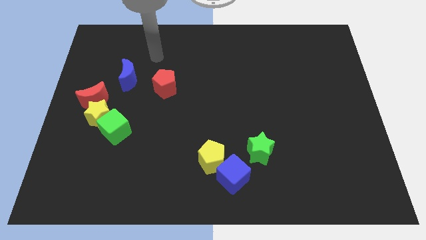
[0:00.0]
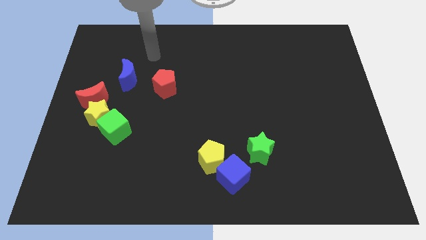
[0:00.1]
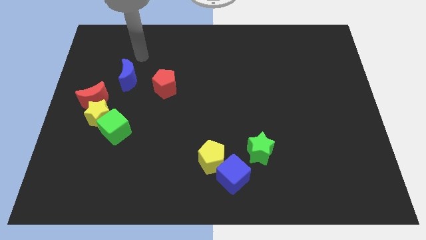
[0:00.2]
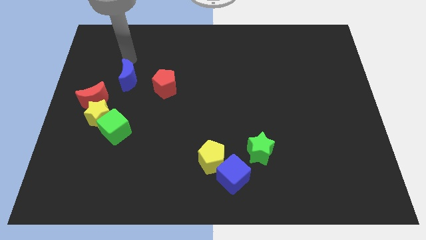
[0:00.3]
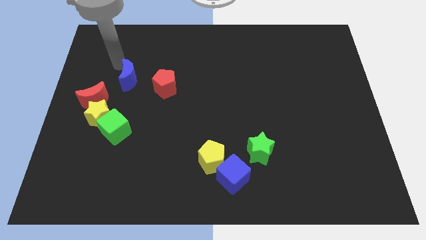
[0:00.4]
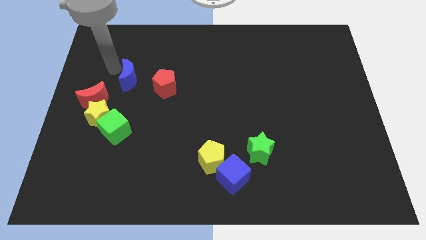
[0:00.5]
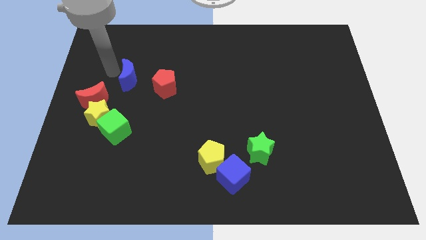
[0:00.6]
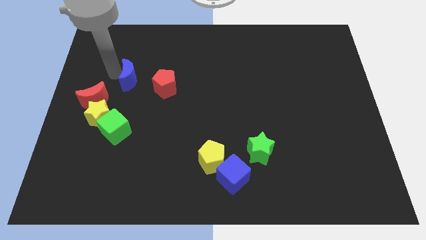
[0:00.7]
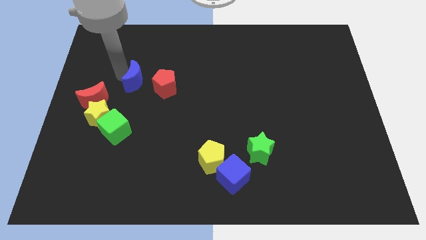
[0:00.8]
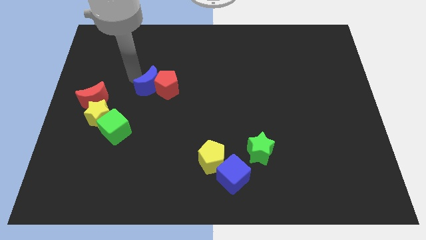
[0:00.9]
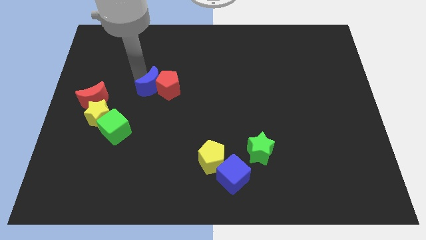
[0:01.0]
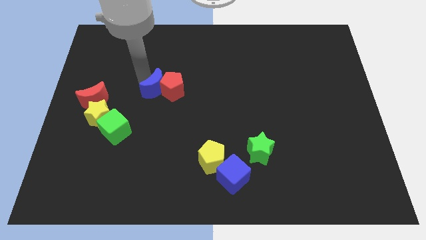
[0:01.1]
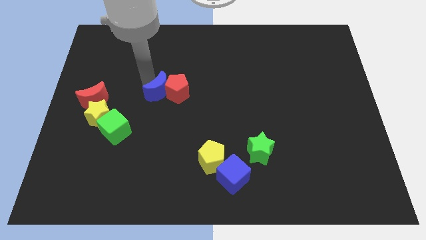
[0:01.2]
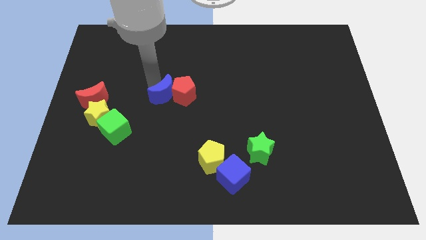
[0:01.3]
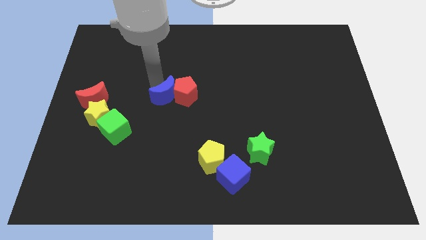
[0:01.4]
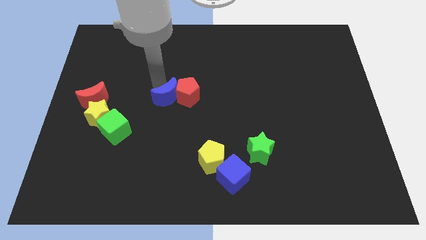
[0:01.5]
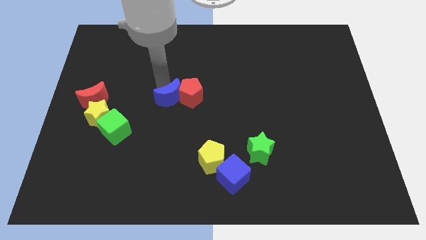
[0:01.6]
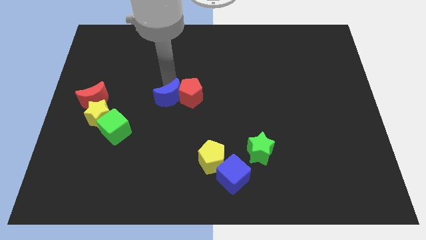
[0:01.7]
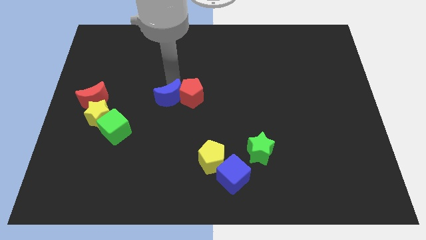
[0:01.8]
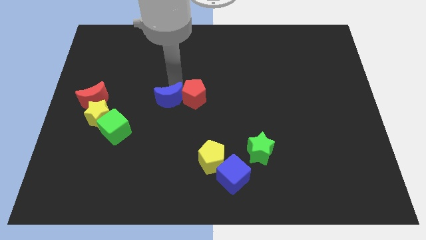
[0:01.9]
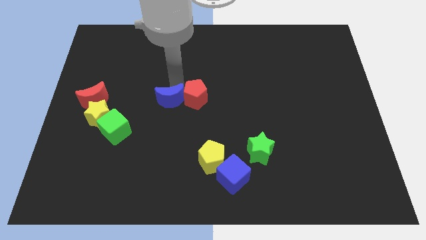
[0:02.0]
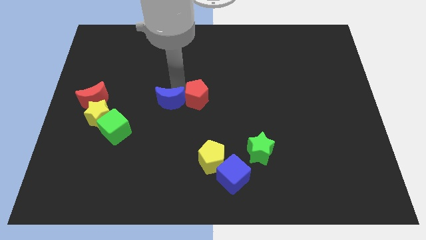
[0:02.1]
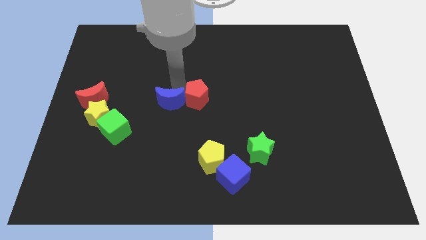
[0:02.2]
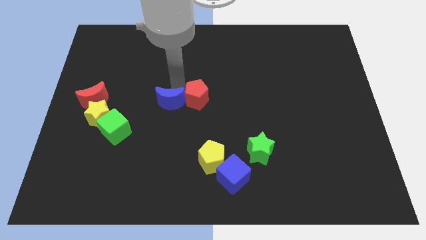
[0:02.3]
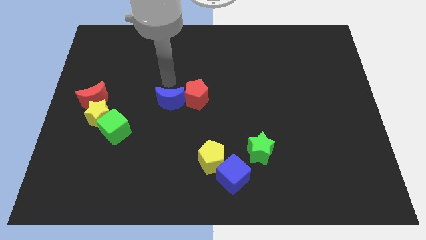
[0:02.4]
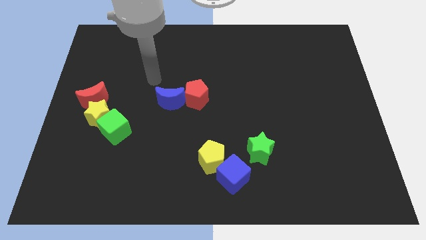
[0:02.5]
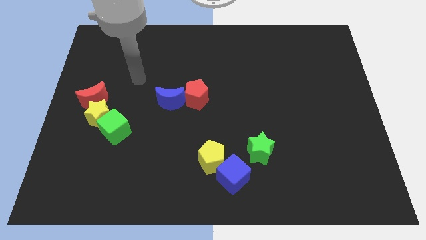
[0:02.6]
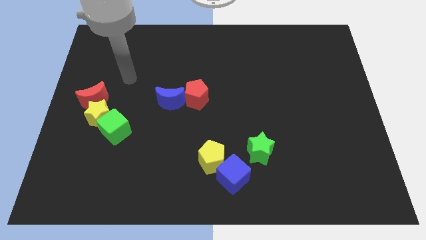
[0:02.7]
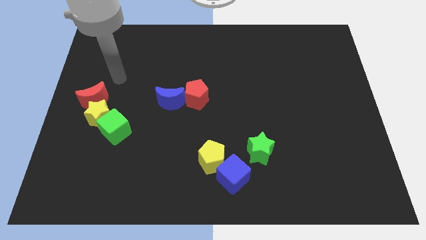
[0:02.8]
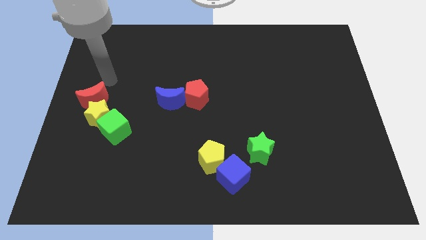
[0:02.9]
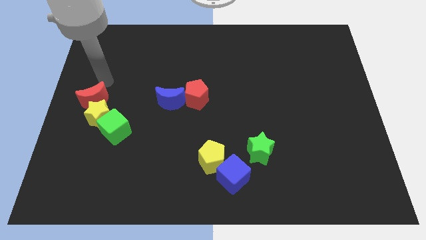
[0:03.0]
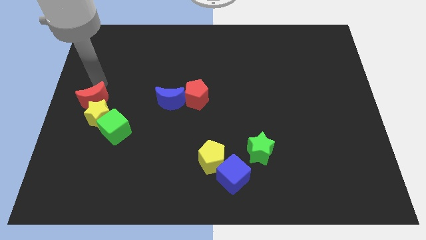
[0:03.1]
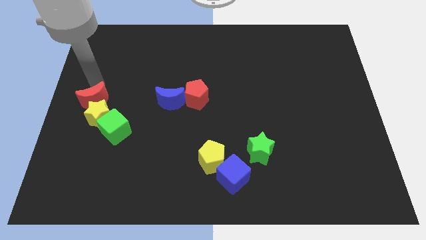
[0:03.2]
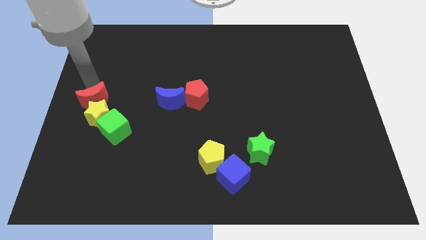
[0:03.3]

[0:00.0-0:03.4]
move the red pentagon and blue crescent diagonally top left side of the yellow pentagon

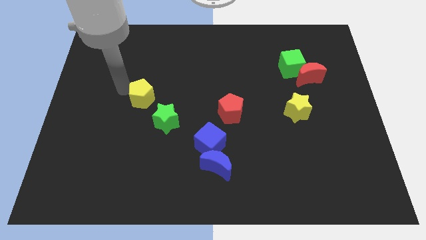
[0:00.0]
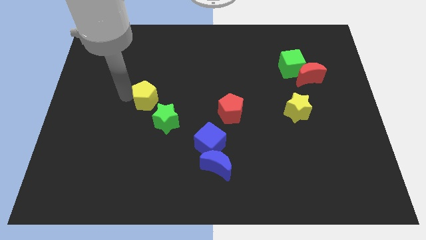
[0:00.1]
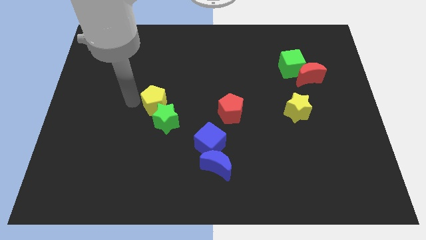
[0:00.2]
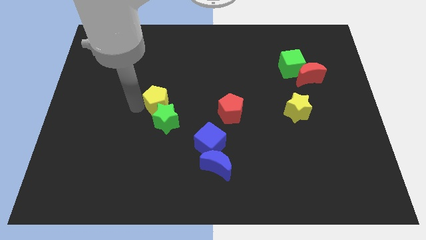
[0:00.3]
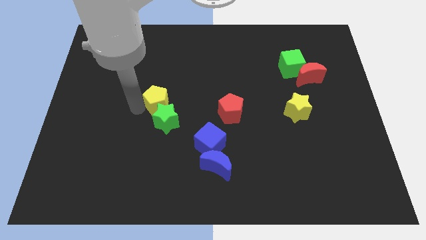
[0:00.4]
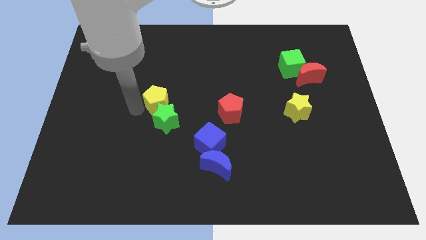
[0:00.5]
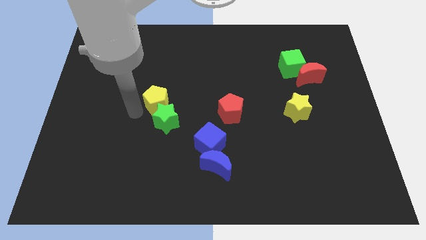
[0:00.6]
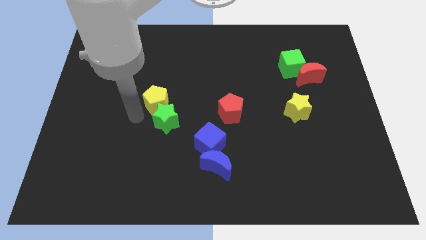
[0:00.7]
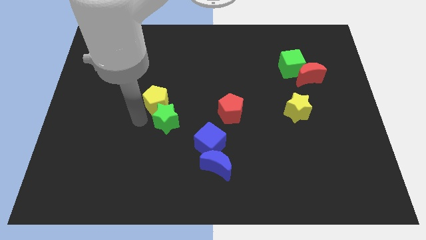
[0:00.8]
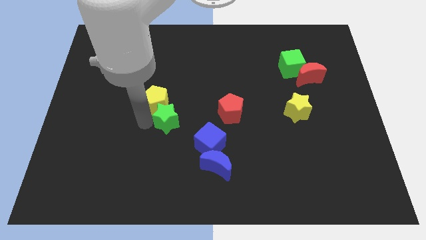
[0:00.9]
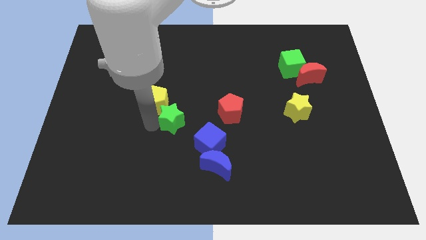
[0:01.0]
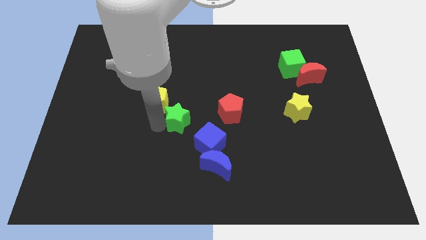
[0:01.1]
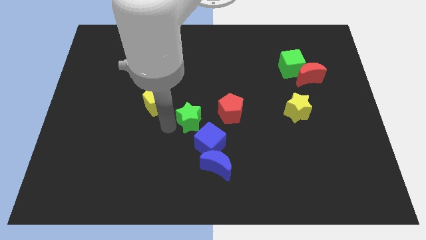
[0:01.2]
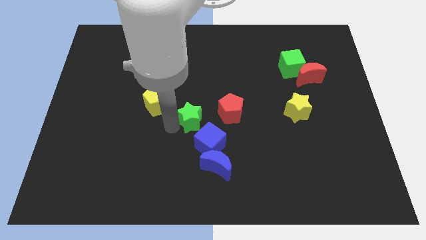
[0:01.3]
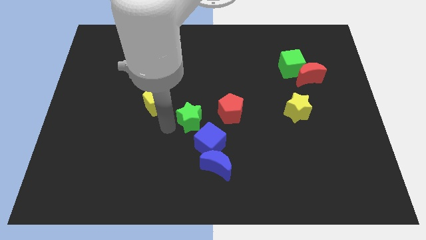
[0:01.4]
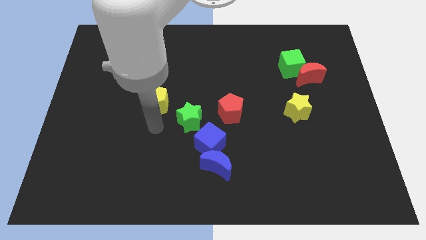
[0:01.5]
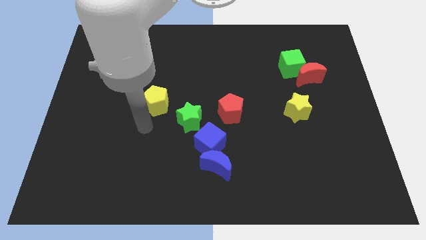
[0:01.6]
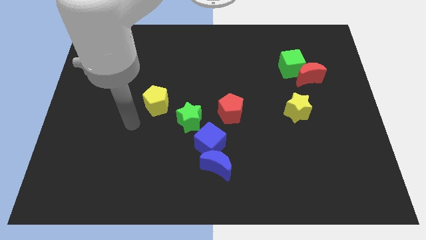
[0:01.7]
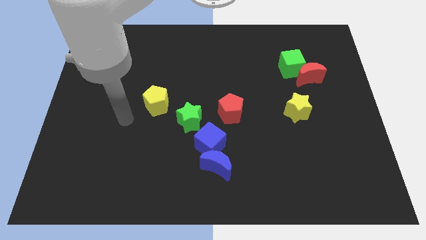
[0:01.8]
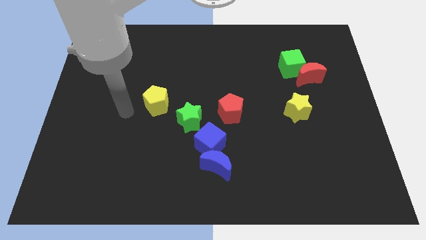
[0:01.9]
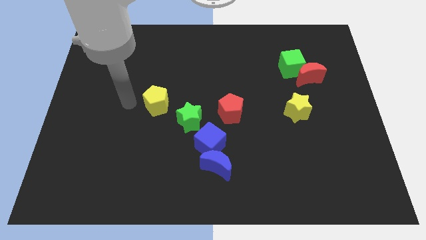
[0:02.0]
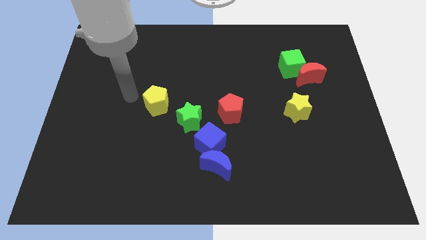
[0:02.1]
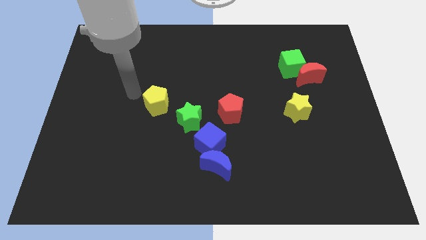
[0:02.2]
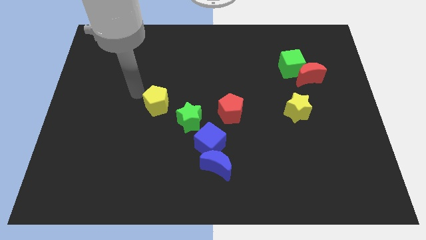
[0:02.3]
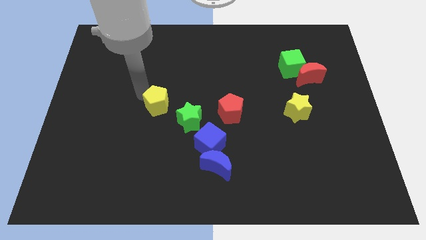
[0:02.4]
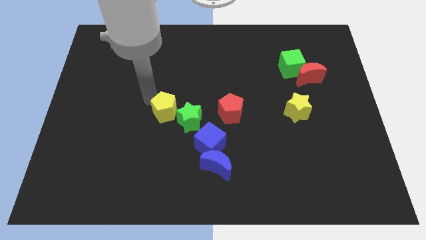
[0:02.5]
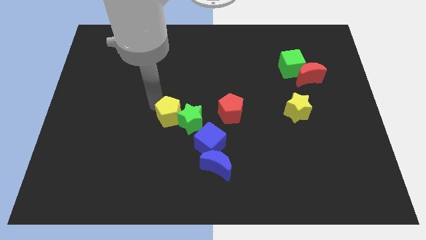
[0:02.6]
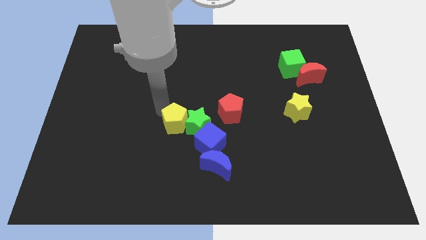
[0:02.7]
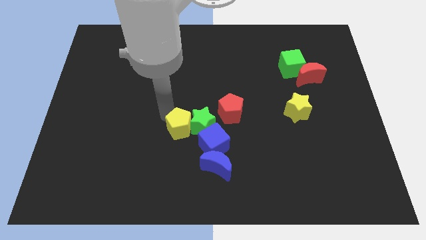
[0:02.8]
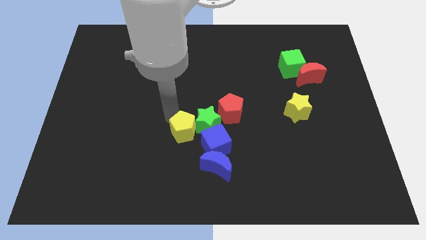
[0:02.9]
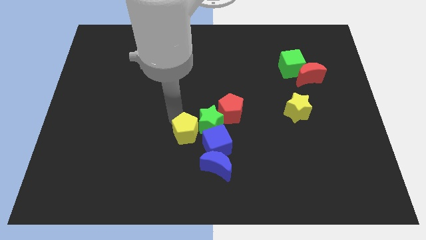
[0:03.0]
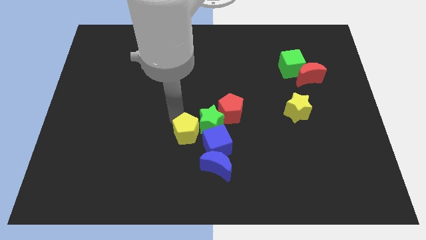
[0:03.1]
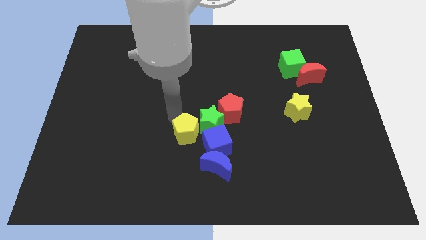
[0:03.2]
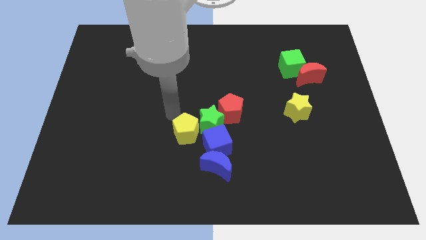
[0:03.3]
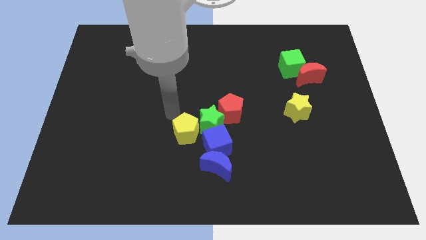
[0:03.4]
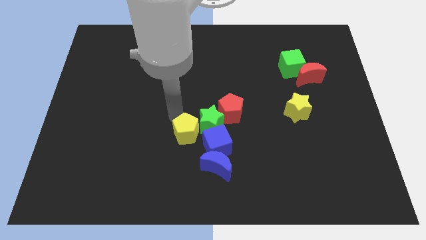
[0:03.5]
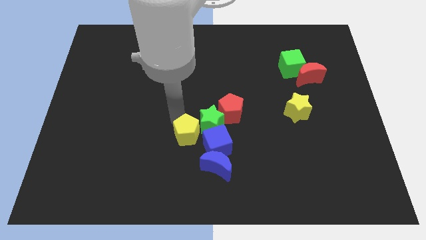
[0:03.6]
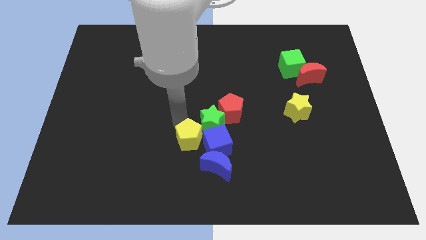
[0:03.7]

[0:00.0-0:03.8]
push the yellow pentagon into the green star

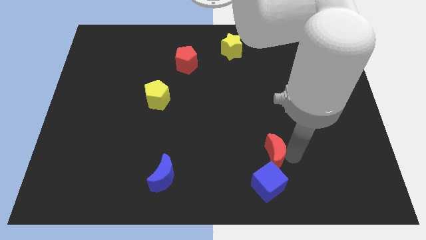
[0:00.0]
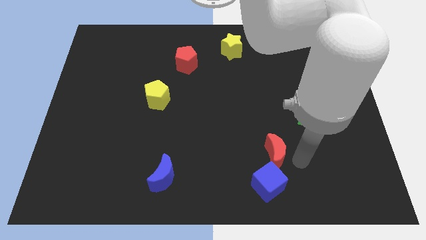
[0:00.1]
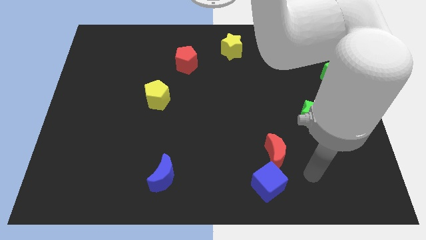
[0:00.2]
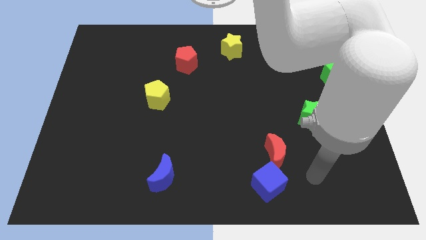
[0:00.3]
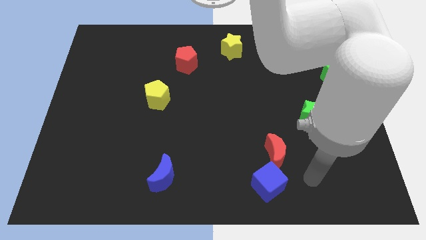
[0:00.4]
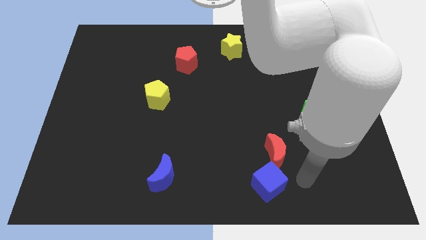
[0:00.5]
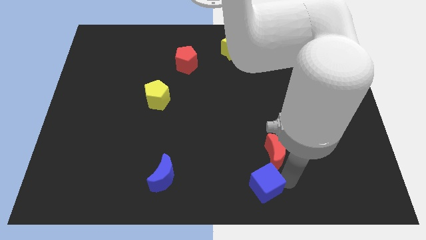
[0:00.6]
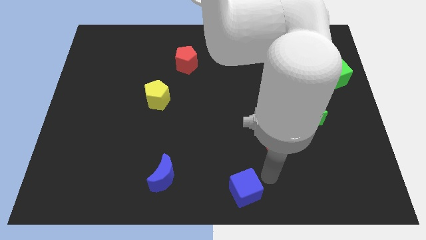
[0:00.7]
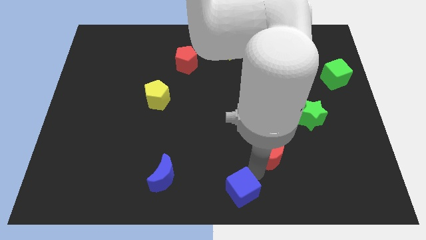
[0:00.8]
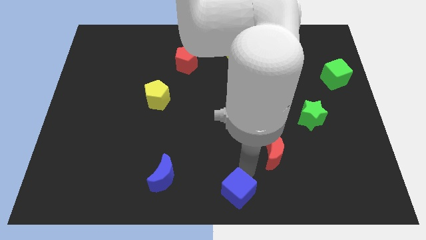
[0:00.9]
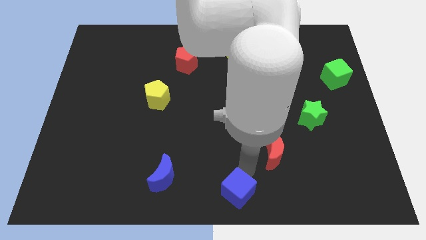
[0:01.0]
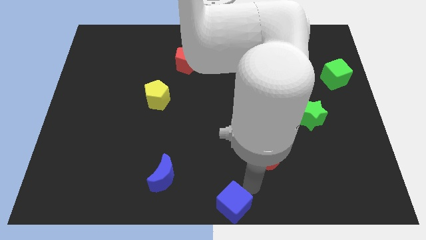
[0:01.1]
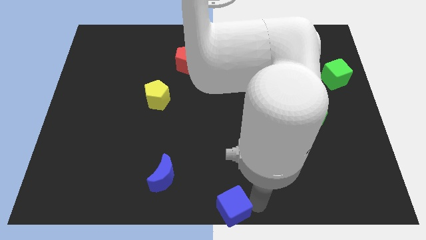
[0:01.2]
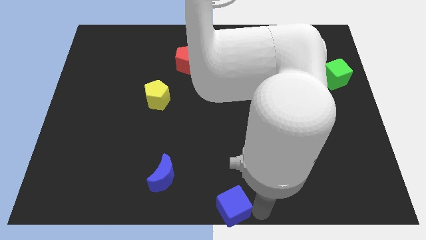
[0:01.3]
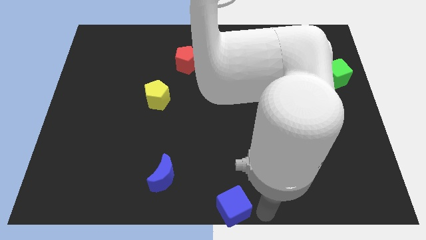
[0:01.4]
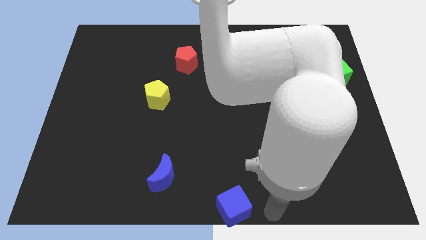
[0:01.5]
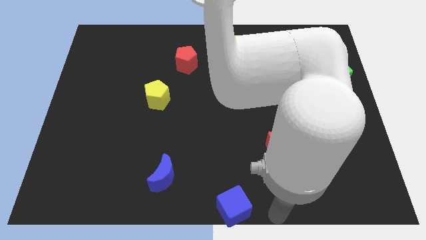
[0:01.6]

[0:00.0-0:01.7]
put the blue cube at the bottom center of the board

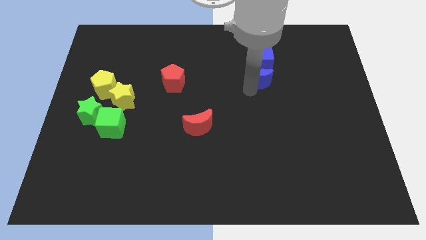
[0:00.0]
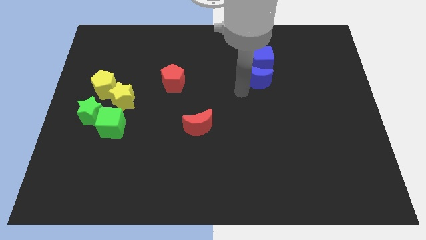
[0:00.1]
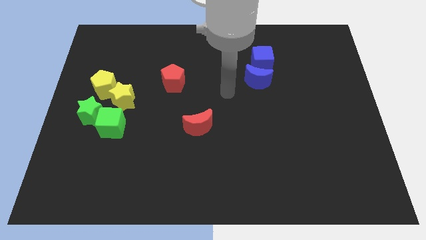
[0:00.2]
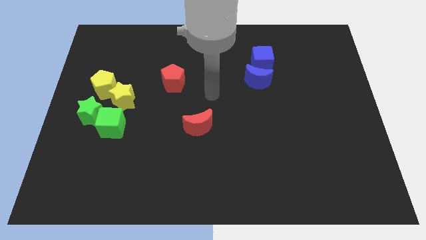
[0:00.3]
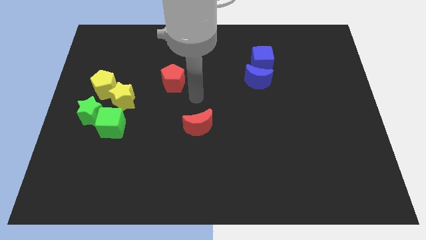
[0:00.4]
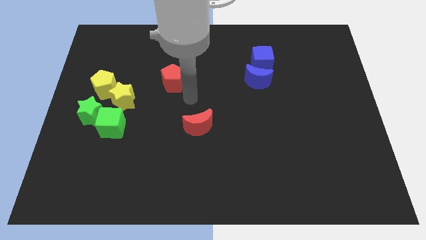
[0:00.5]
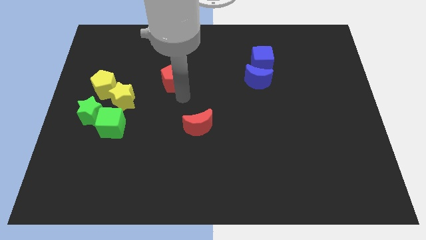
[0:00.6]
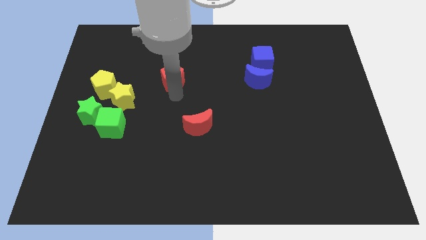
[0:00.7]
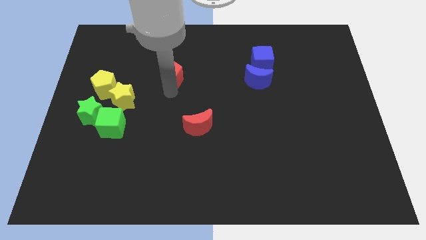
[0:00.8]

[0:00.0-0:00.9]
move away from the blue moon
